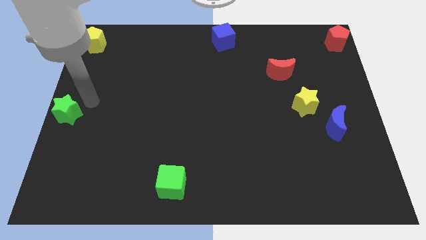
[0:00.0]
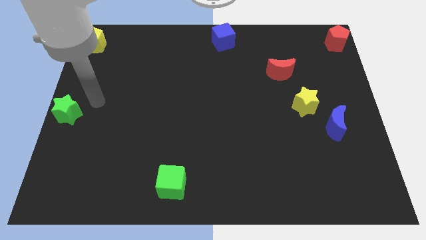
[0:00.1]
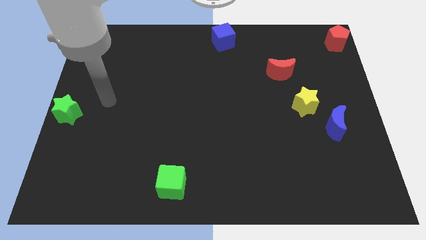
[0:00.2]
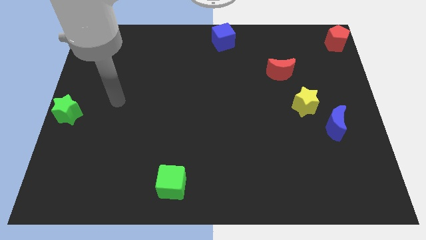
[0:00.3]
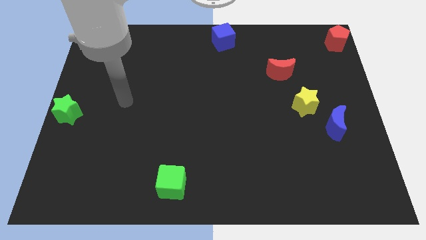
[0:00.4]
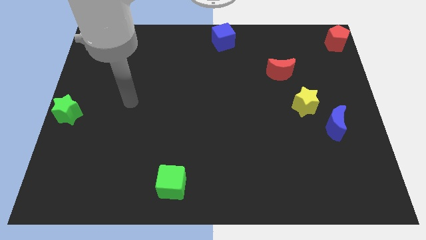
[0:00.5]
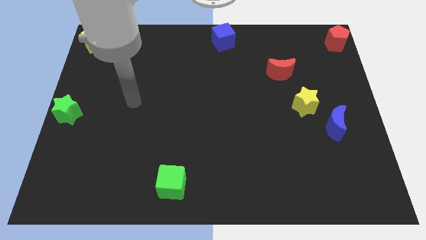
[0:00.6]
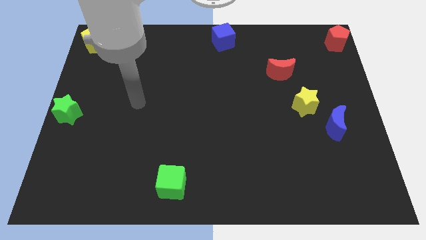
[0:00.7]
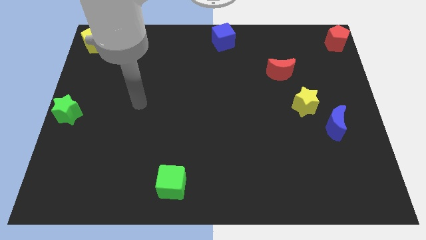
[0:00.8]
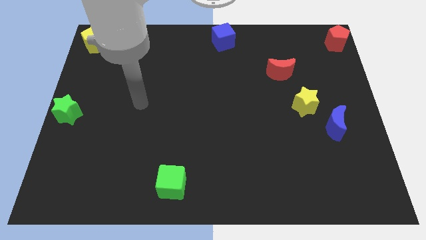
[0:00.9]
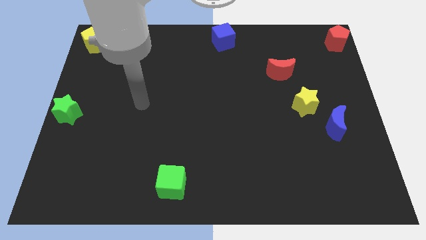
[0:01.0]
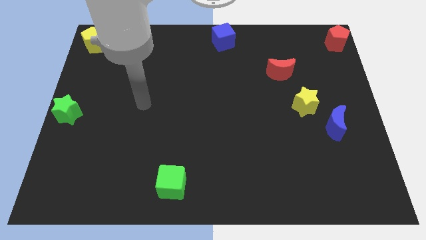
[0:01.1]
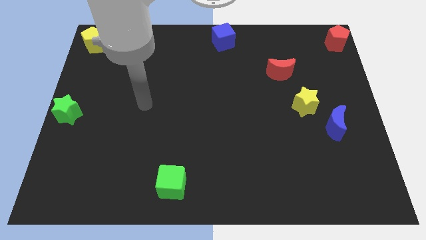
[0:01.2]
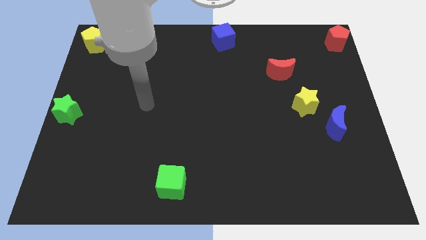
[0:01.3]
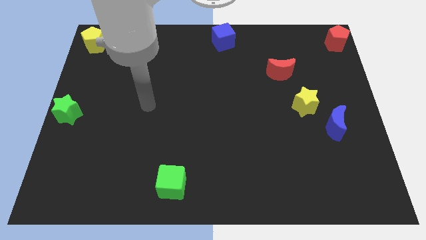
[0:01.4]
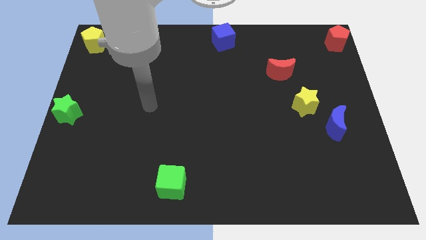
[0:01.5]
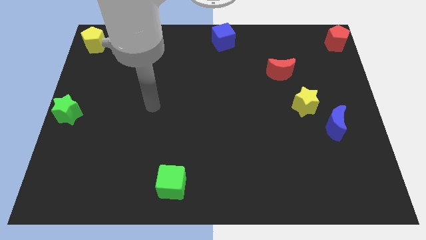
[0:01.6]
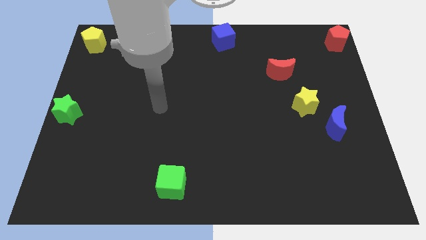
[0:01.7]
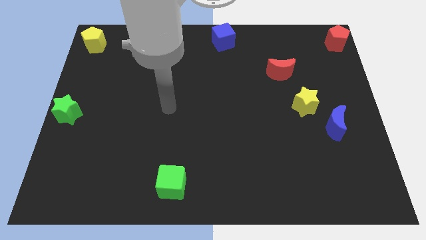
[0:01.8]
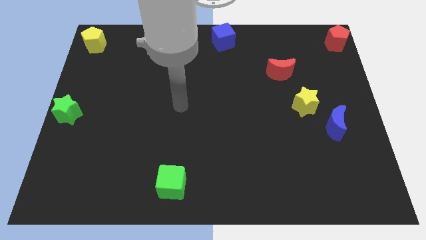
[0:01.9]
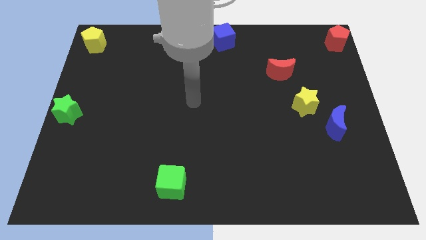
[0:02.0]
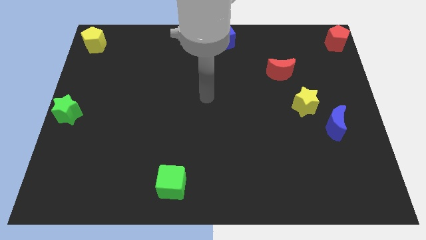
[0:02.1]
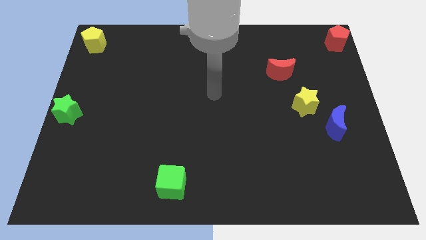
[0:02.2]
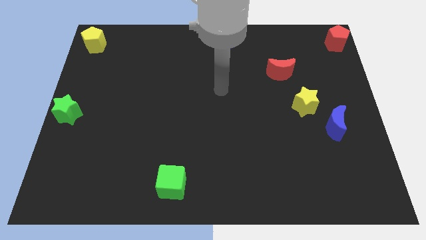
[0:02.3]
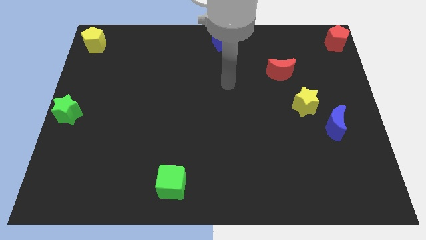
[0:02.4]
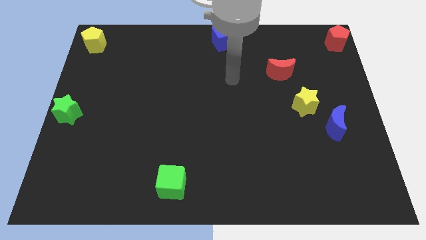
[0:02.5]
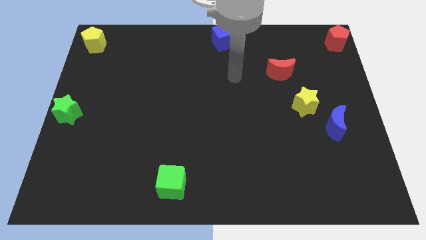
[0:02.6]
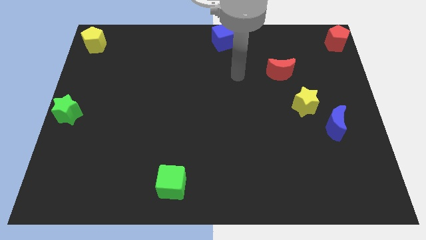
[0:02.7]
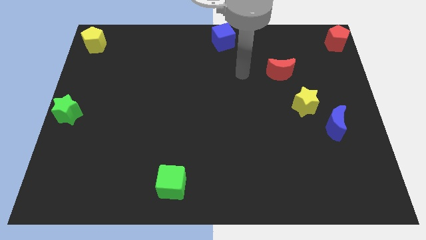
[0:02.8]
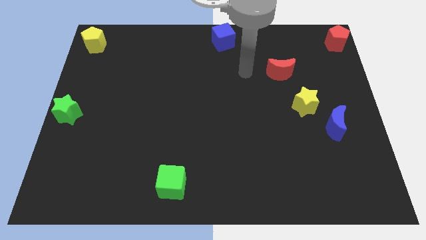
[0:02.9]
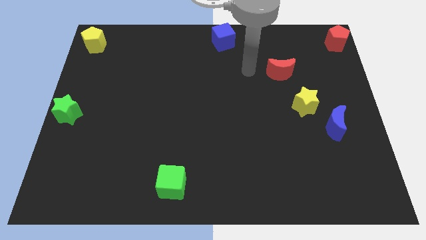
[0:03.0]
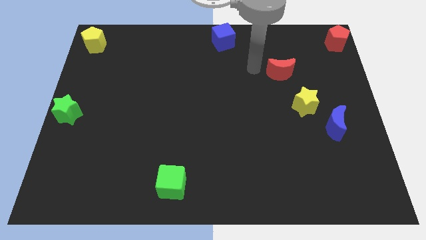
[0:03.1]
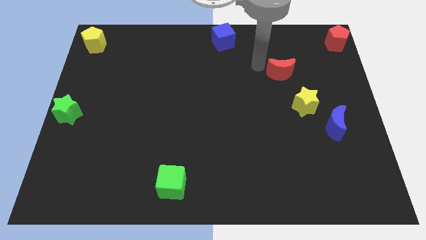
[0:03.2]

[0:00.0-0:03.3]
move arm near red moon

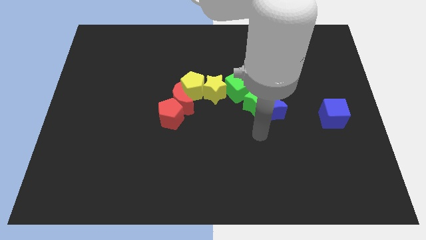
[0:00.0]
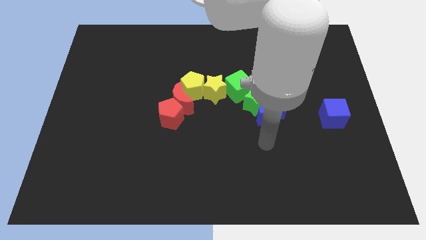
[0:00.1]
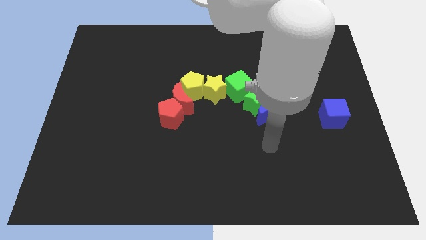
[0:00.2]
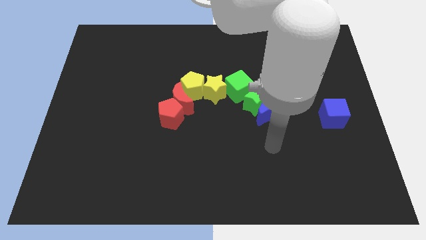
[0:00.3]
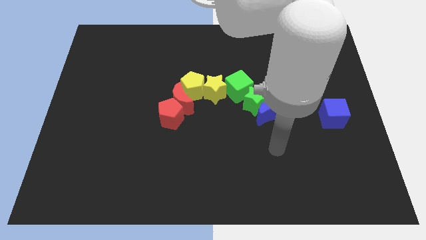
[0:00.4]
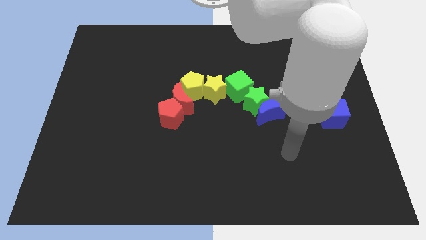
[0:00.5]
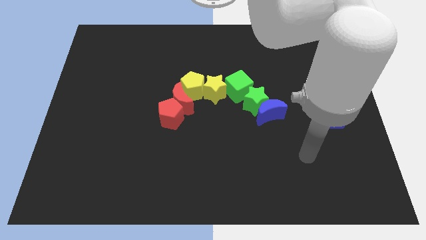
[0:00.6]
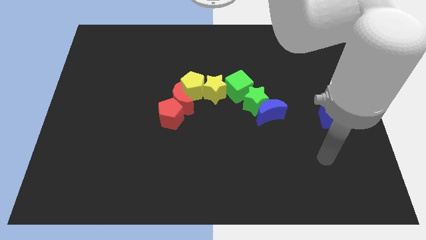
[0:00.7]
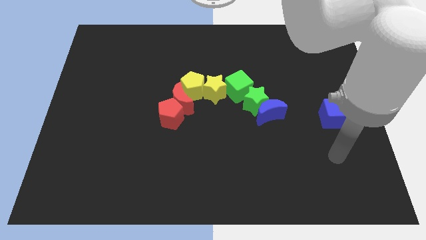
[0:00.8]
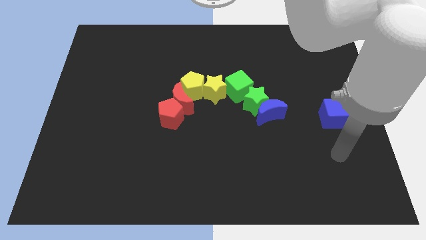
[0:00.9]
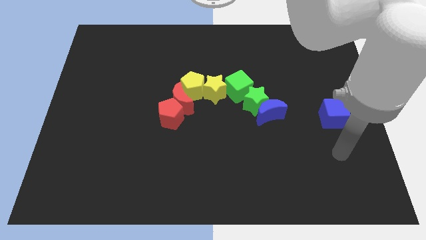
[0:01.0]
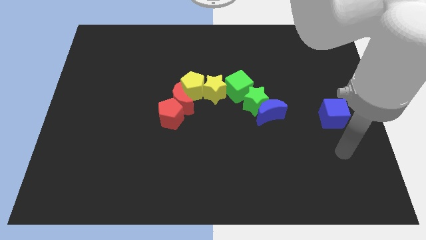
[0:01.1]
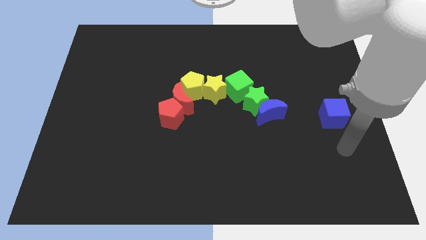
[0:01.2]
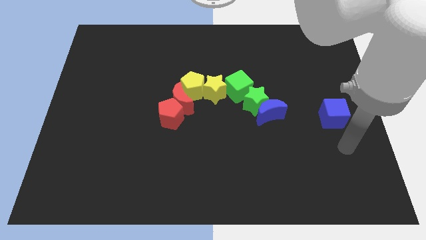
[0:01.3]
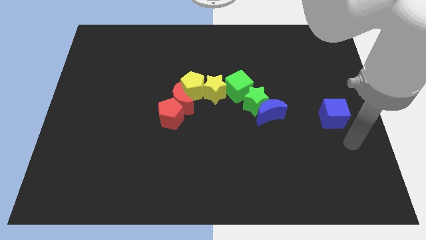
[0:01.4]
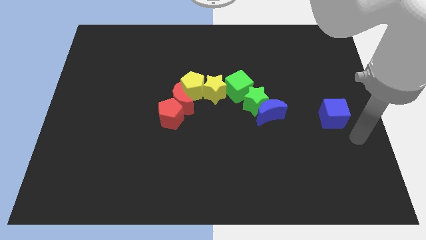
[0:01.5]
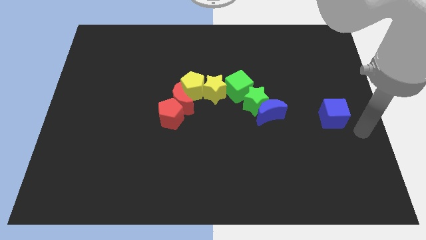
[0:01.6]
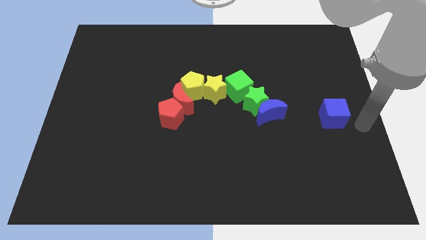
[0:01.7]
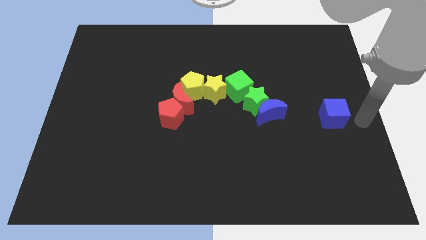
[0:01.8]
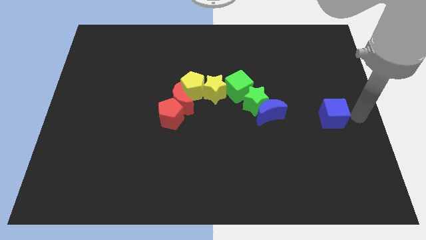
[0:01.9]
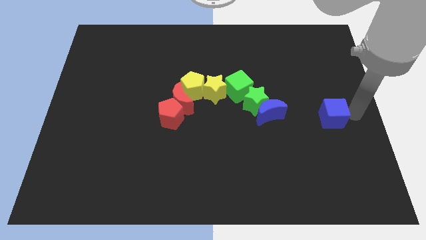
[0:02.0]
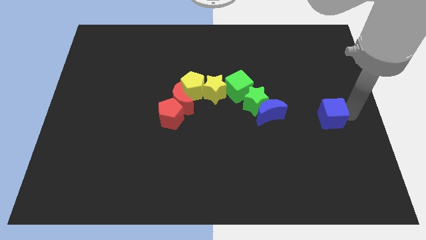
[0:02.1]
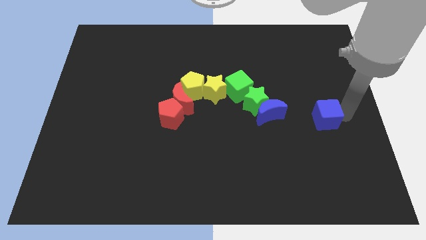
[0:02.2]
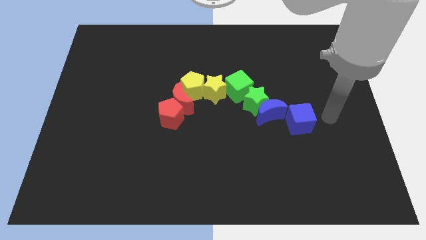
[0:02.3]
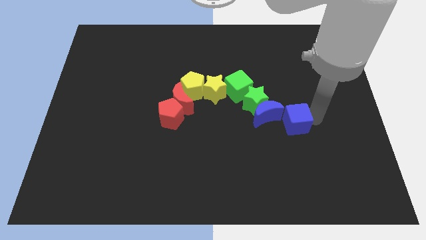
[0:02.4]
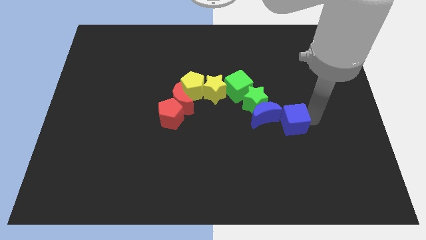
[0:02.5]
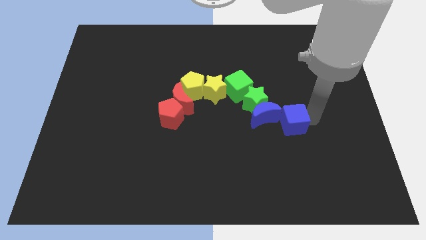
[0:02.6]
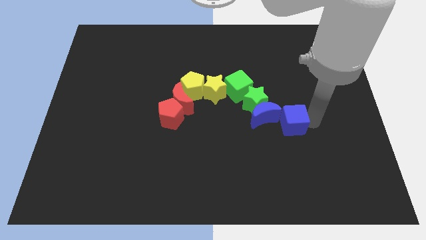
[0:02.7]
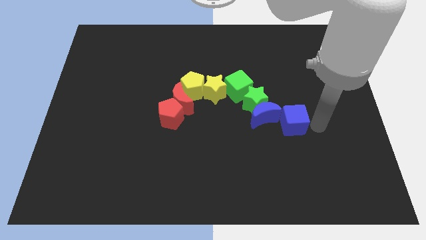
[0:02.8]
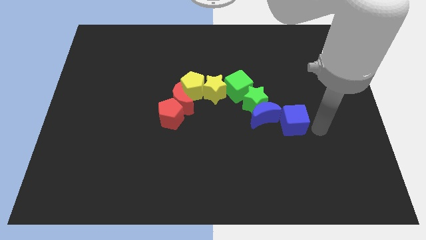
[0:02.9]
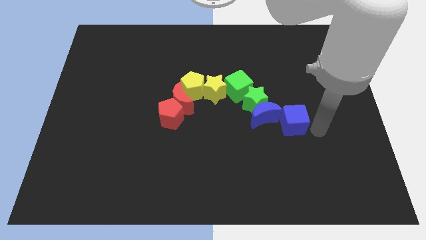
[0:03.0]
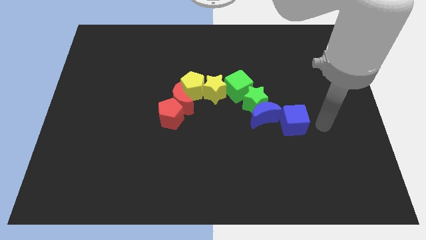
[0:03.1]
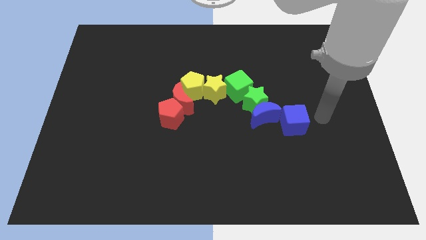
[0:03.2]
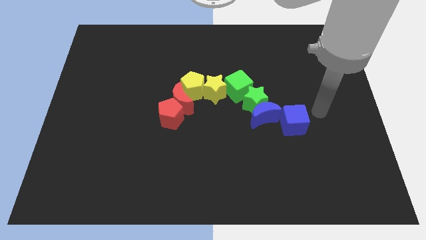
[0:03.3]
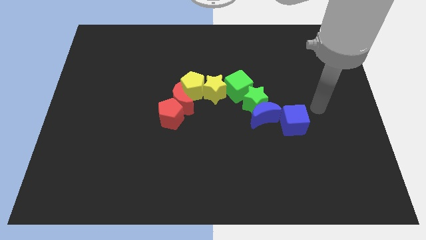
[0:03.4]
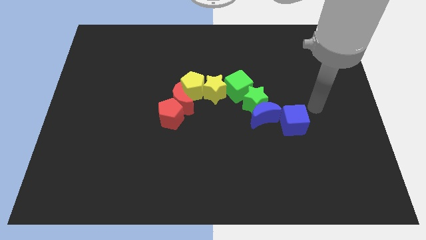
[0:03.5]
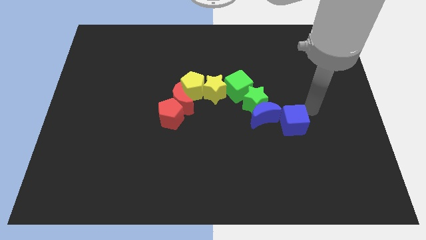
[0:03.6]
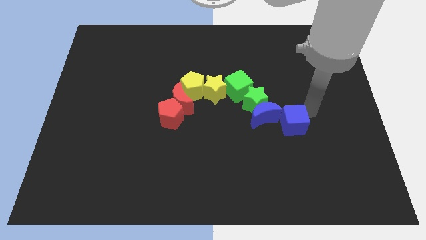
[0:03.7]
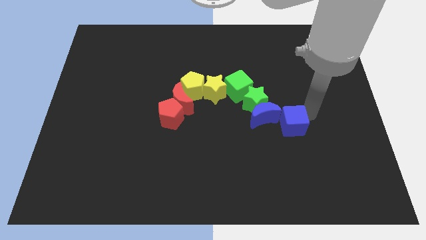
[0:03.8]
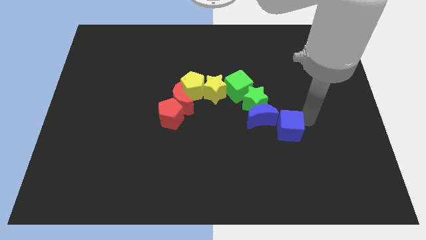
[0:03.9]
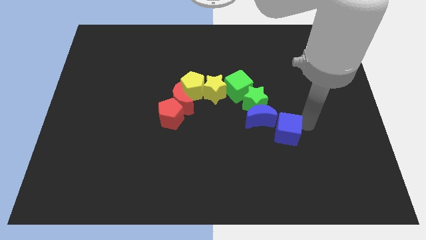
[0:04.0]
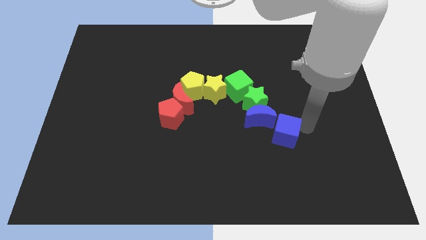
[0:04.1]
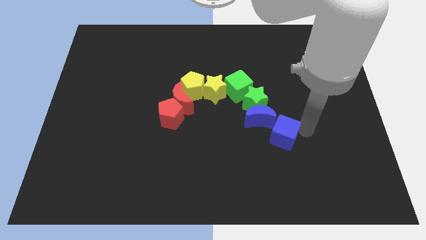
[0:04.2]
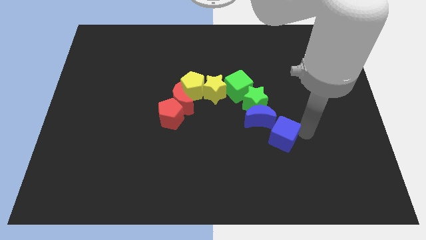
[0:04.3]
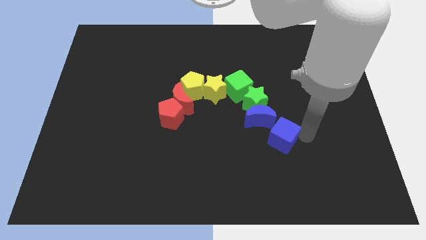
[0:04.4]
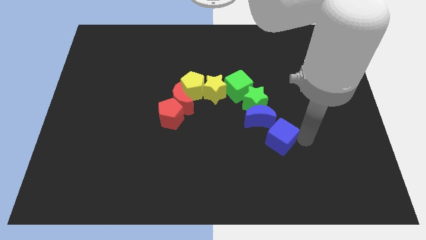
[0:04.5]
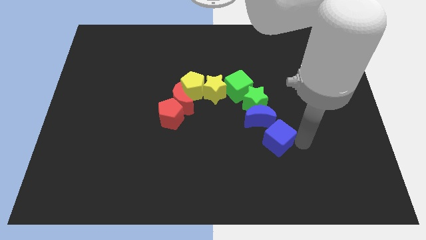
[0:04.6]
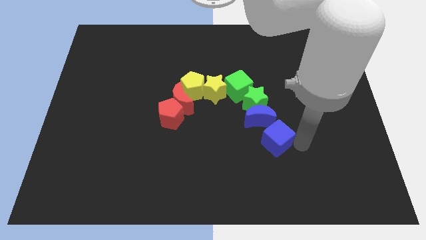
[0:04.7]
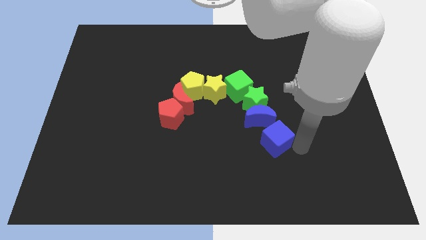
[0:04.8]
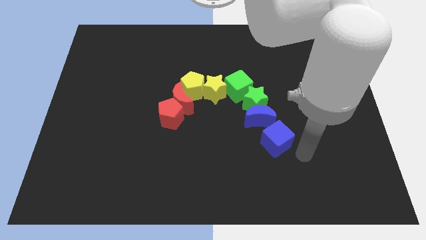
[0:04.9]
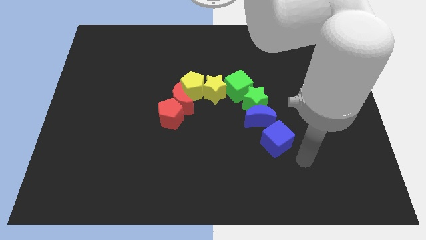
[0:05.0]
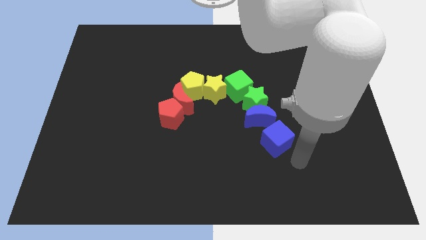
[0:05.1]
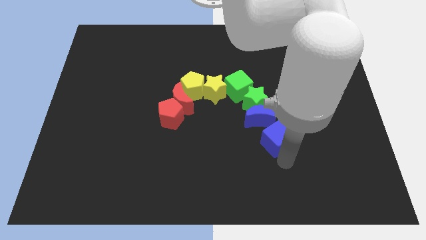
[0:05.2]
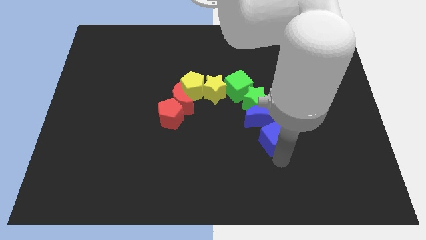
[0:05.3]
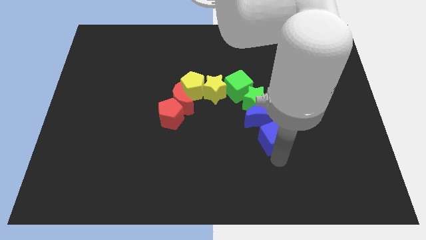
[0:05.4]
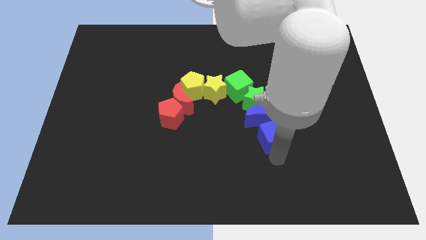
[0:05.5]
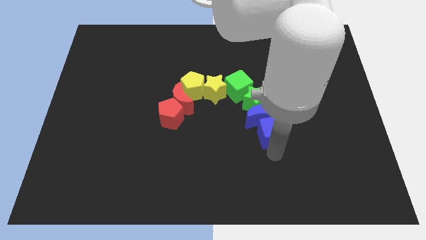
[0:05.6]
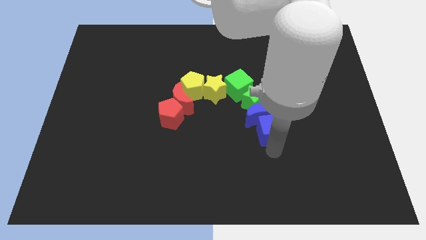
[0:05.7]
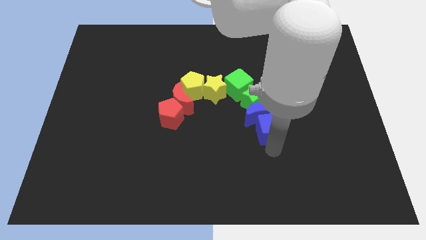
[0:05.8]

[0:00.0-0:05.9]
place the blue cube below the blue crescent
